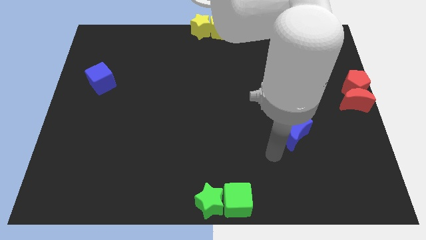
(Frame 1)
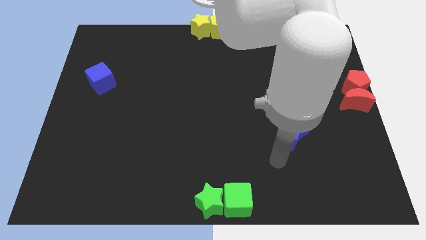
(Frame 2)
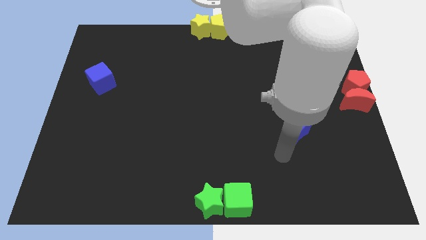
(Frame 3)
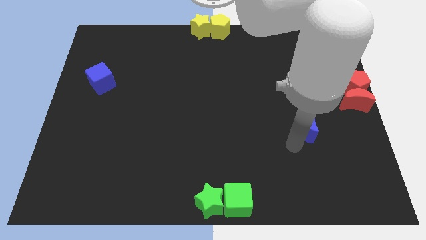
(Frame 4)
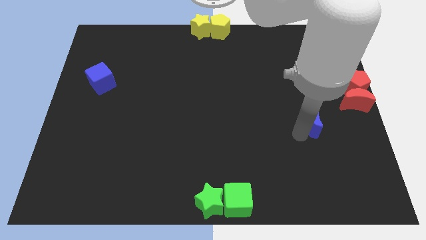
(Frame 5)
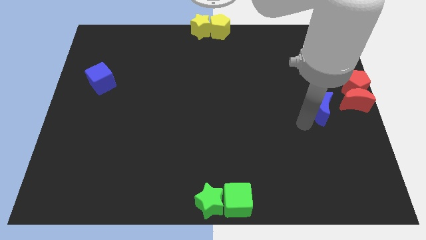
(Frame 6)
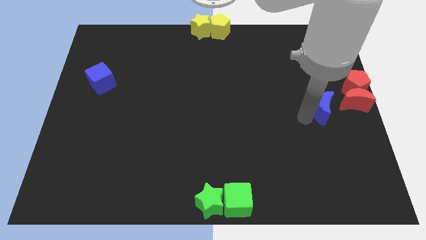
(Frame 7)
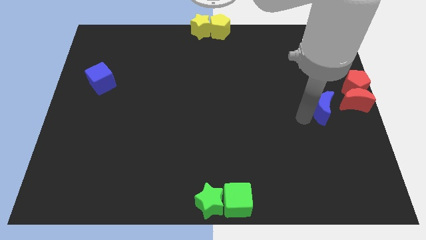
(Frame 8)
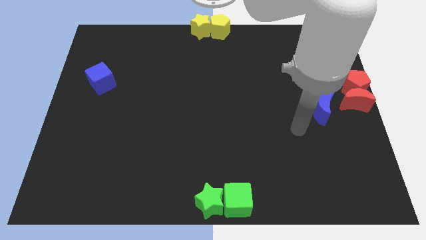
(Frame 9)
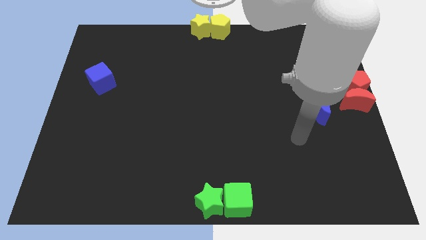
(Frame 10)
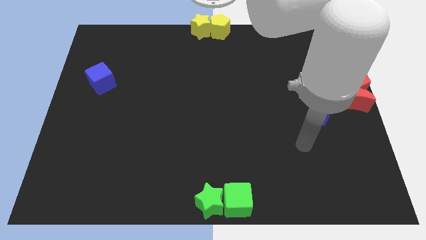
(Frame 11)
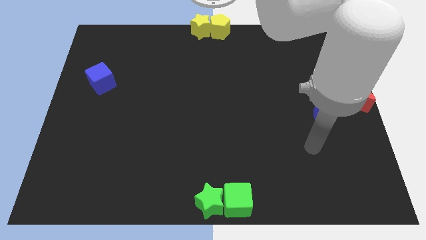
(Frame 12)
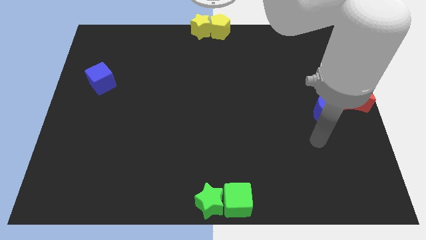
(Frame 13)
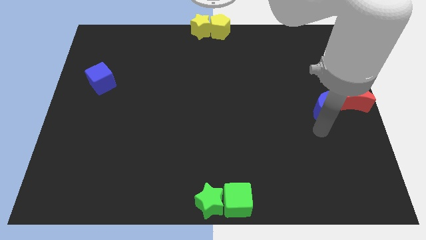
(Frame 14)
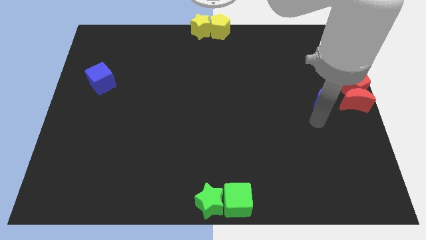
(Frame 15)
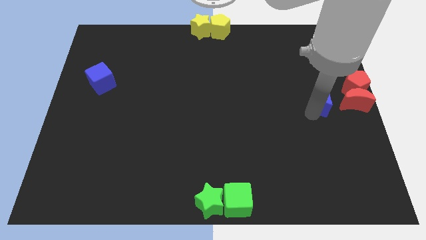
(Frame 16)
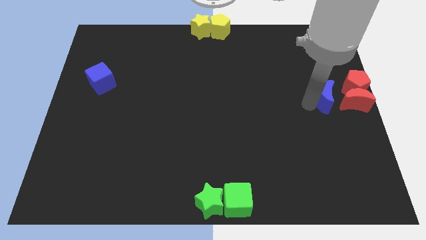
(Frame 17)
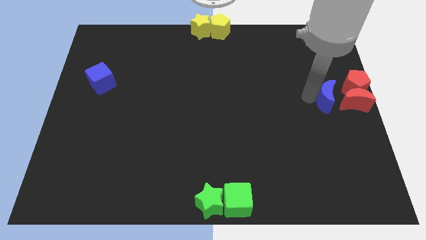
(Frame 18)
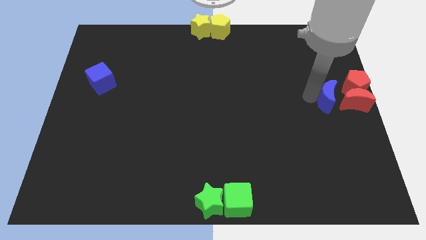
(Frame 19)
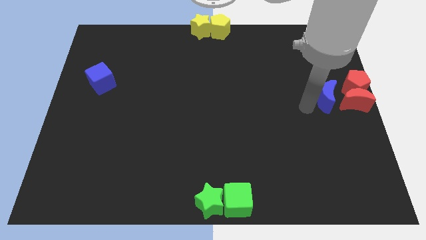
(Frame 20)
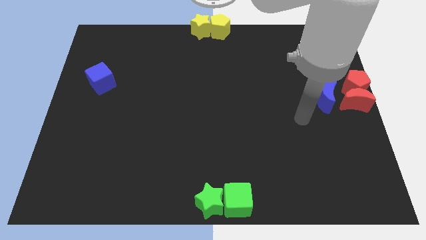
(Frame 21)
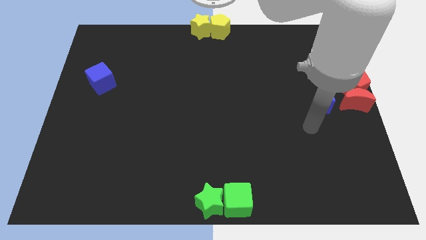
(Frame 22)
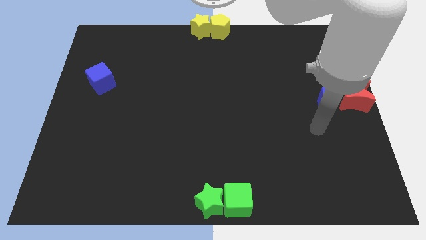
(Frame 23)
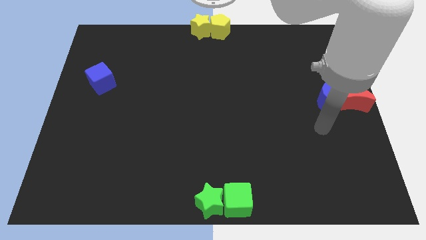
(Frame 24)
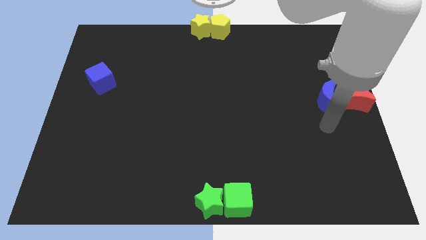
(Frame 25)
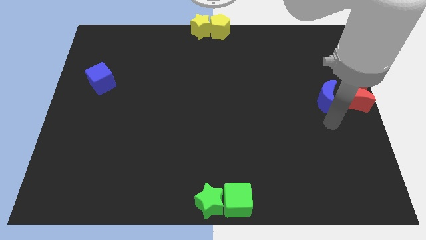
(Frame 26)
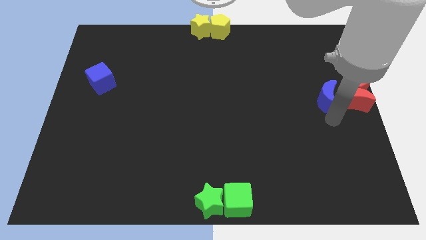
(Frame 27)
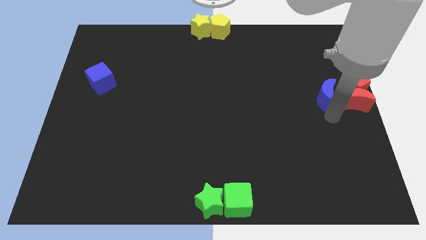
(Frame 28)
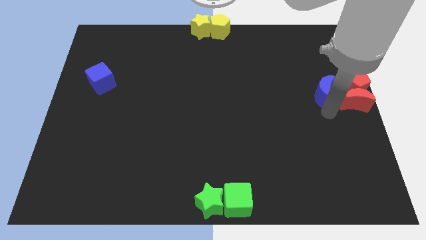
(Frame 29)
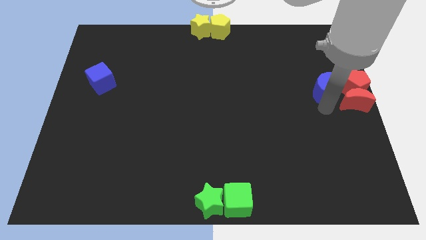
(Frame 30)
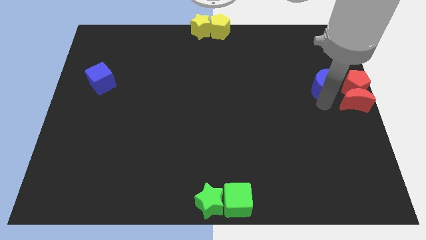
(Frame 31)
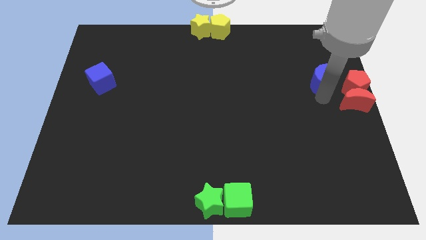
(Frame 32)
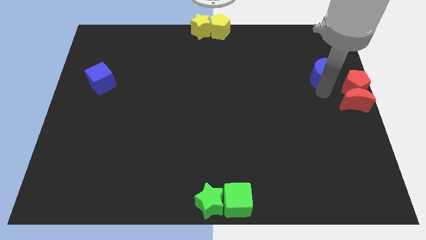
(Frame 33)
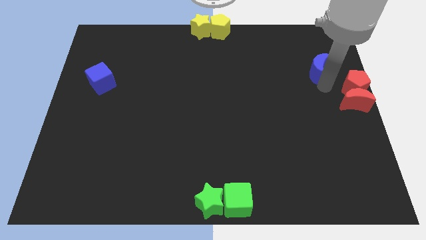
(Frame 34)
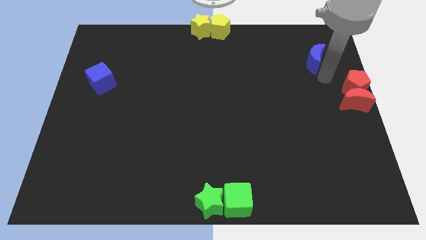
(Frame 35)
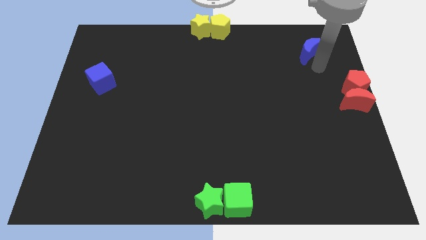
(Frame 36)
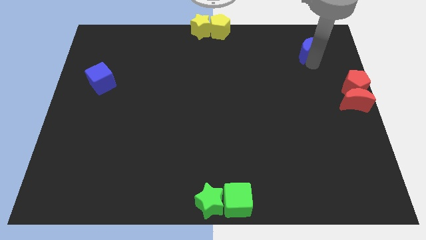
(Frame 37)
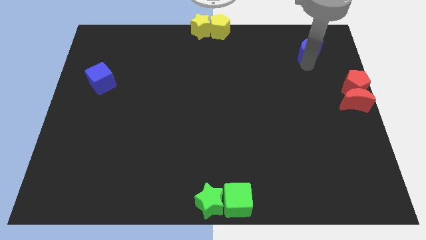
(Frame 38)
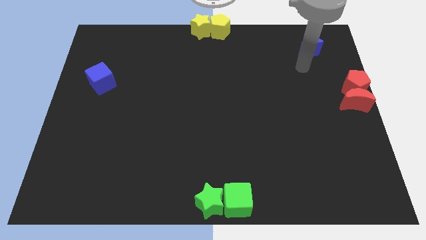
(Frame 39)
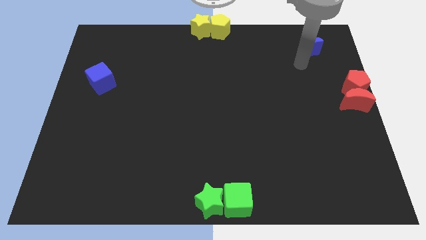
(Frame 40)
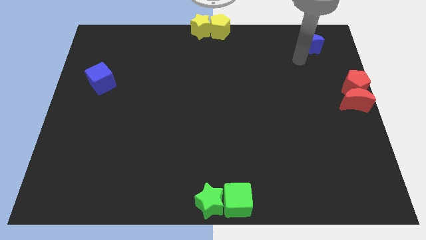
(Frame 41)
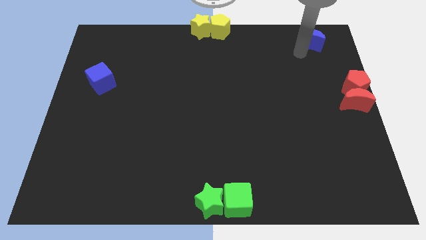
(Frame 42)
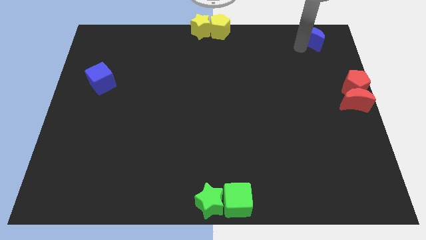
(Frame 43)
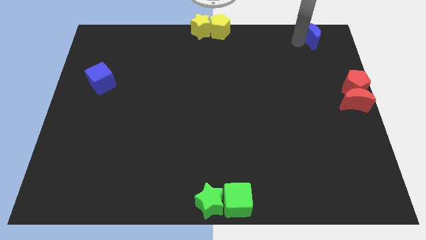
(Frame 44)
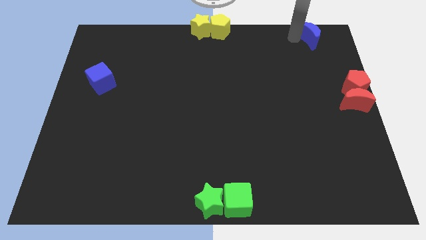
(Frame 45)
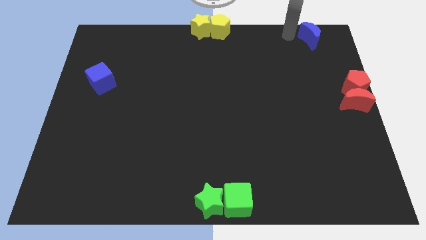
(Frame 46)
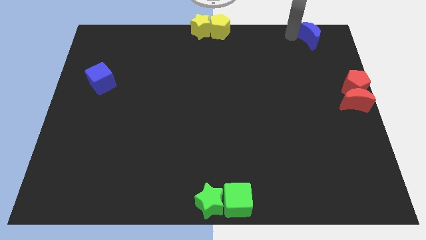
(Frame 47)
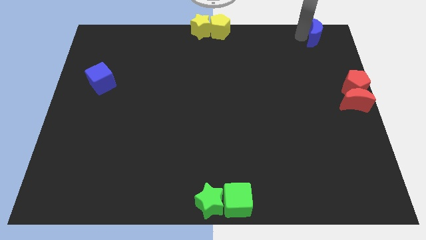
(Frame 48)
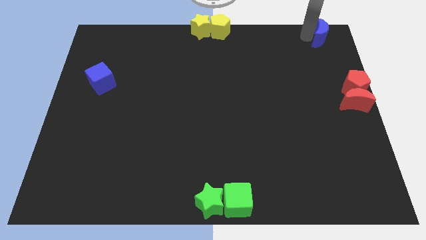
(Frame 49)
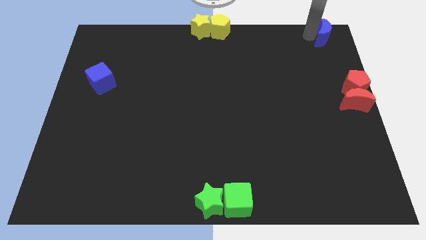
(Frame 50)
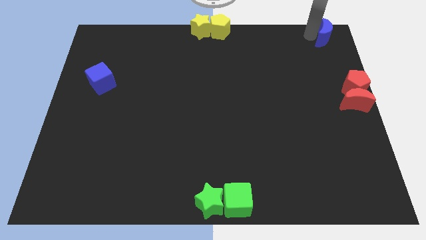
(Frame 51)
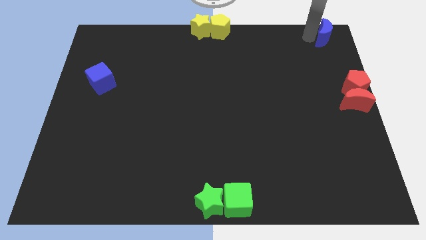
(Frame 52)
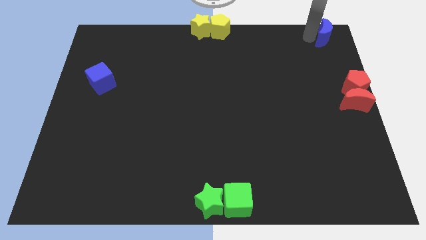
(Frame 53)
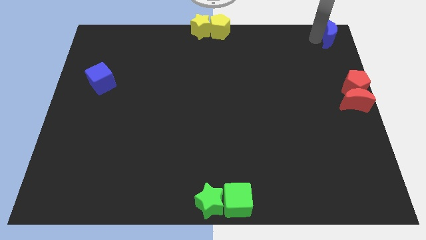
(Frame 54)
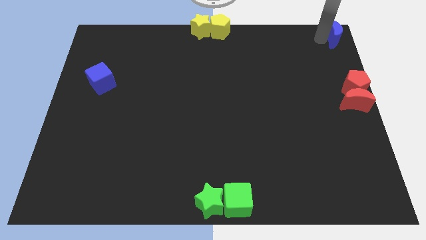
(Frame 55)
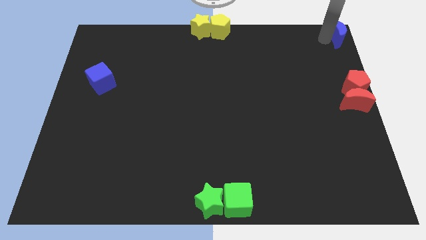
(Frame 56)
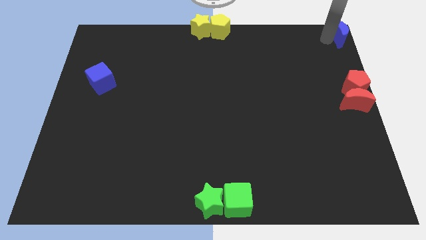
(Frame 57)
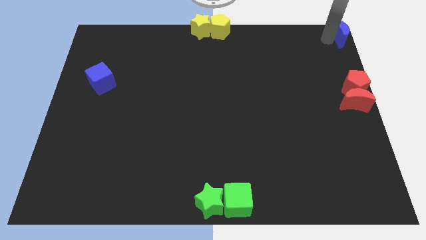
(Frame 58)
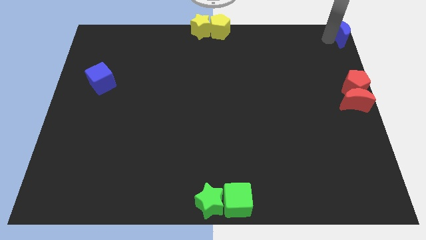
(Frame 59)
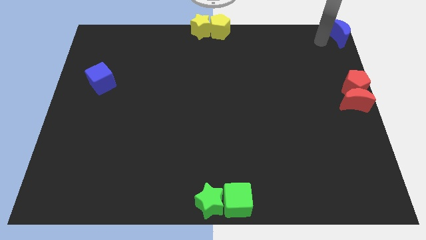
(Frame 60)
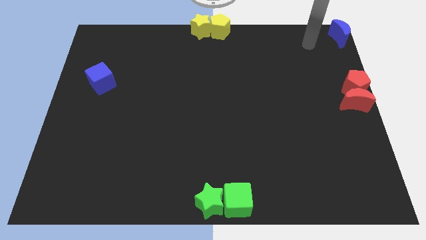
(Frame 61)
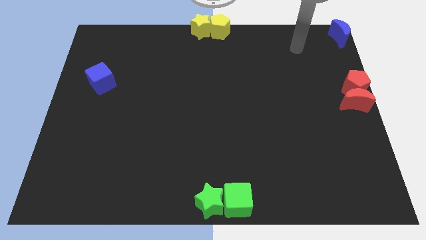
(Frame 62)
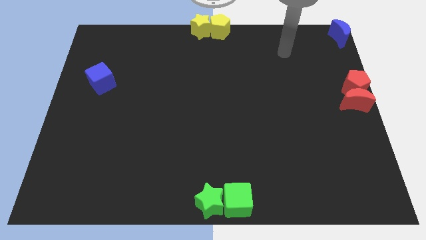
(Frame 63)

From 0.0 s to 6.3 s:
push the blue moon to the top right

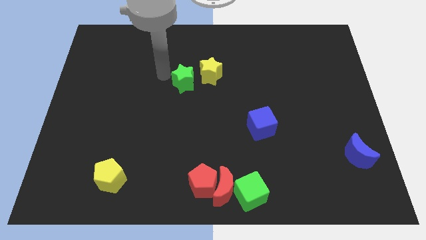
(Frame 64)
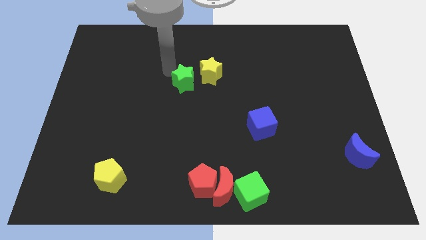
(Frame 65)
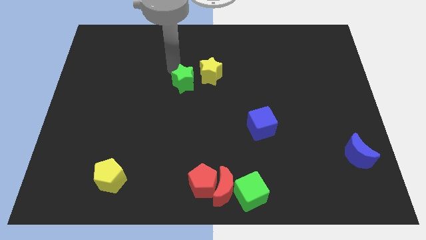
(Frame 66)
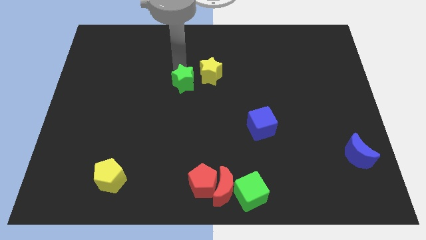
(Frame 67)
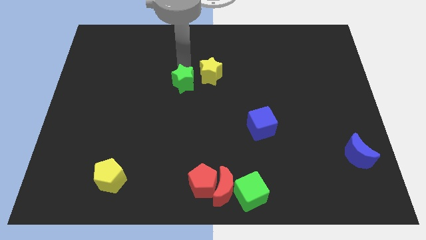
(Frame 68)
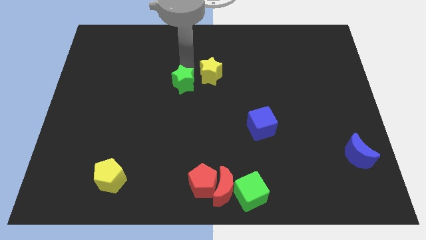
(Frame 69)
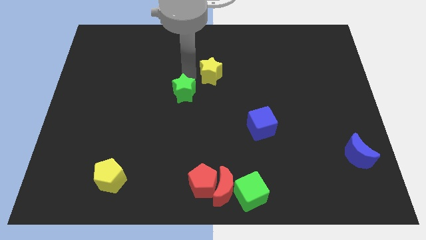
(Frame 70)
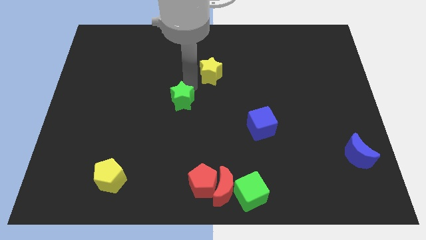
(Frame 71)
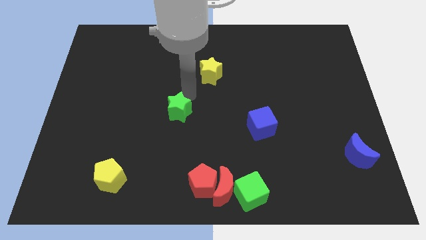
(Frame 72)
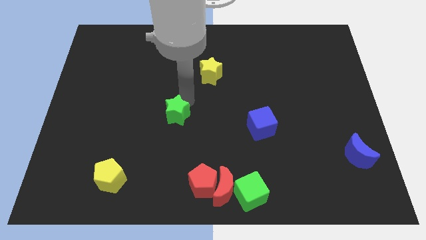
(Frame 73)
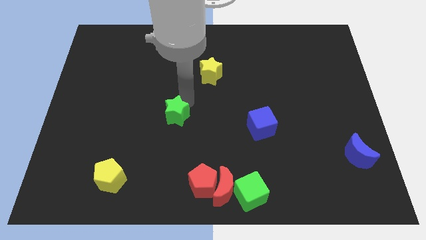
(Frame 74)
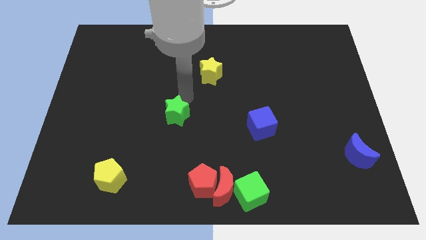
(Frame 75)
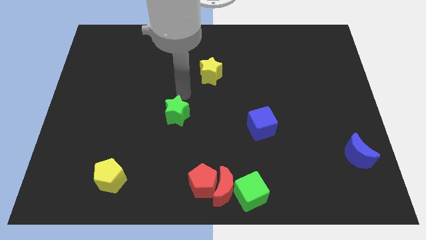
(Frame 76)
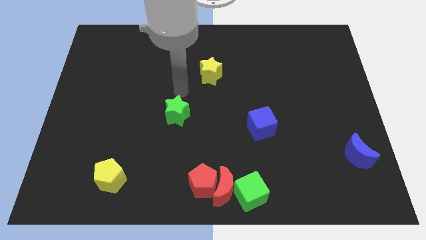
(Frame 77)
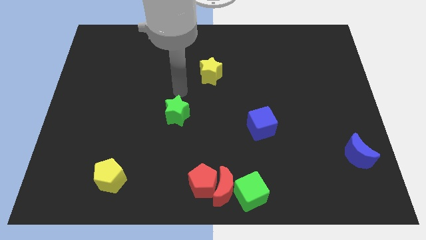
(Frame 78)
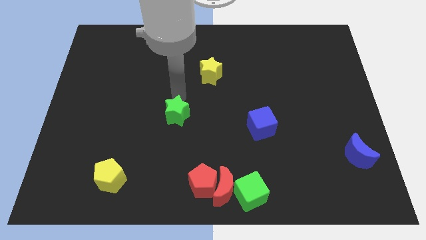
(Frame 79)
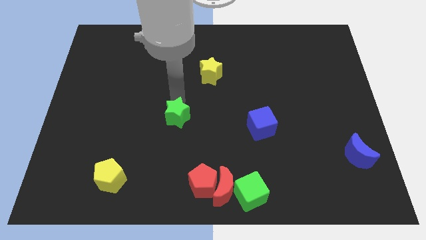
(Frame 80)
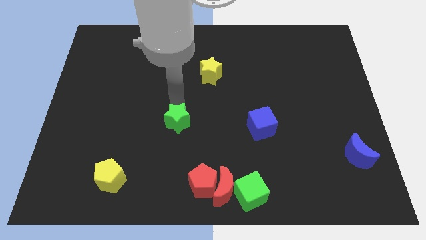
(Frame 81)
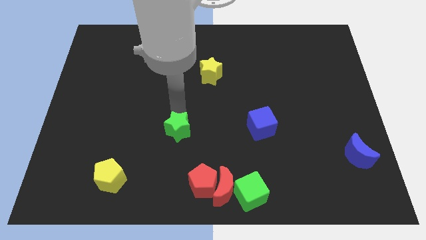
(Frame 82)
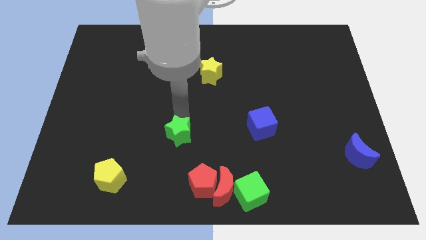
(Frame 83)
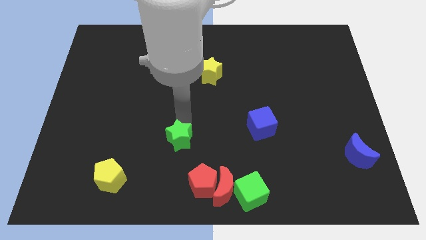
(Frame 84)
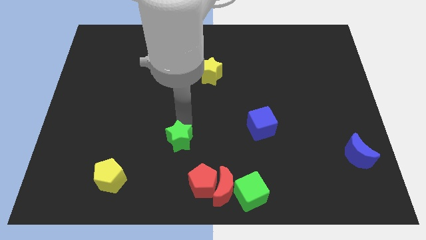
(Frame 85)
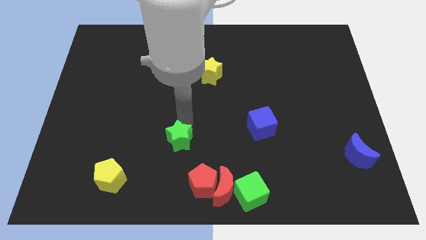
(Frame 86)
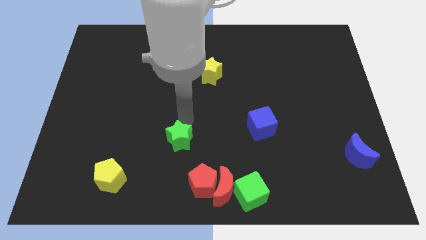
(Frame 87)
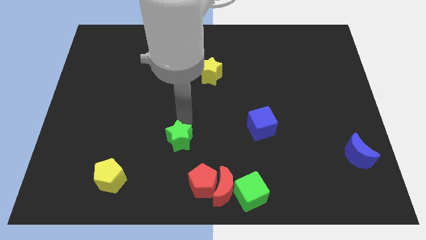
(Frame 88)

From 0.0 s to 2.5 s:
pull the green star towards red pentagon

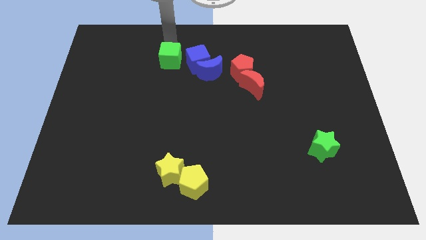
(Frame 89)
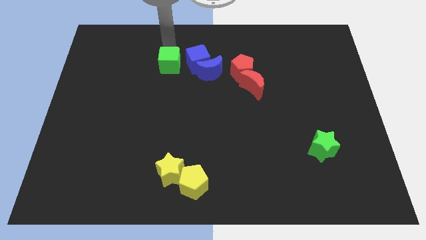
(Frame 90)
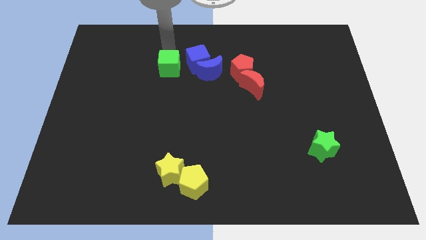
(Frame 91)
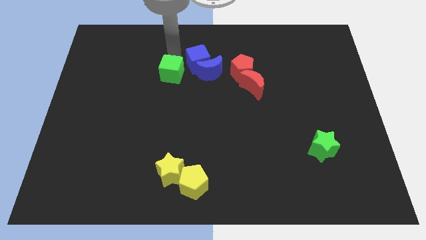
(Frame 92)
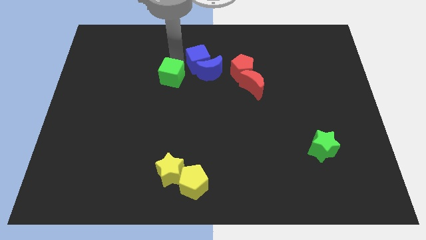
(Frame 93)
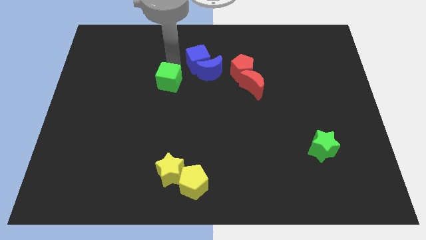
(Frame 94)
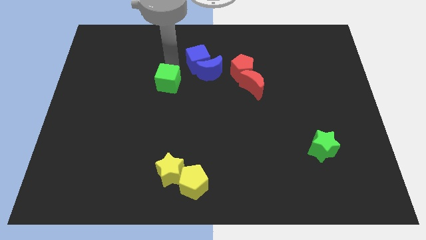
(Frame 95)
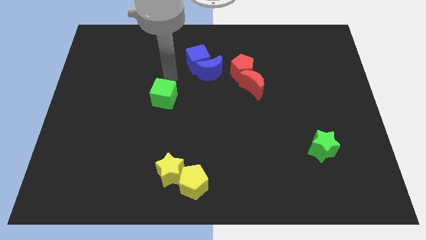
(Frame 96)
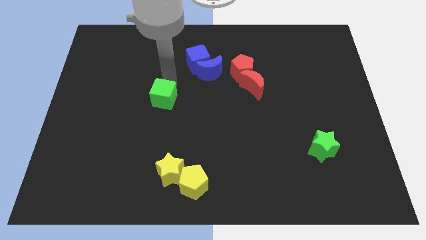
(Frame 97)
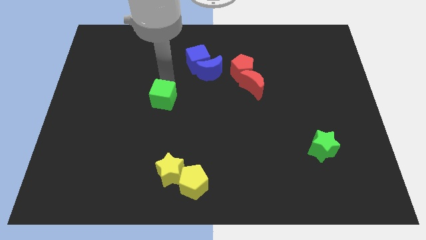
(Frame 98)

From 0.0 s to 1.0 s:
push the green cube towards the yellow star
